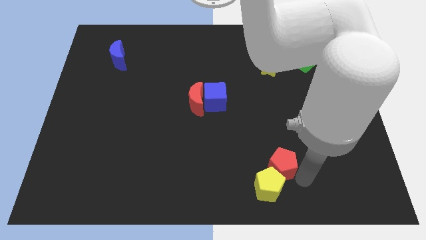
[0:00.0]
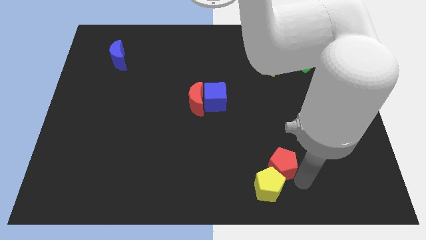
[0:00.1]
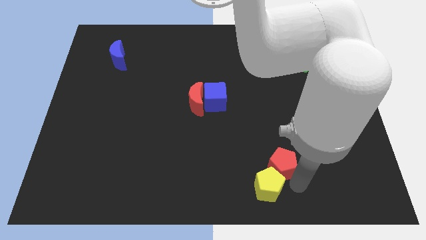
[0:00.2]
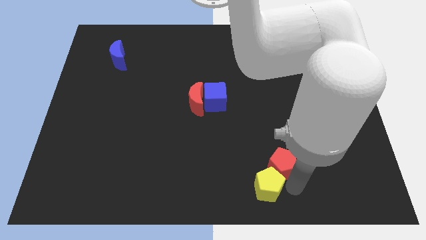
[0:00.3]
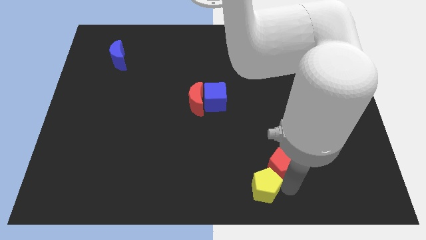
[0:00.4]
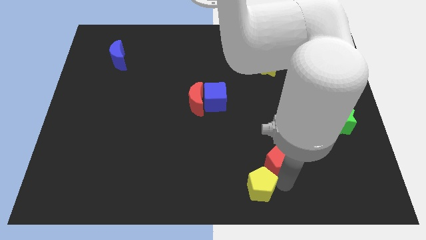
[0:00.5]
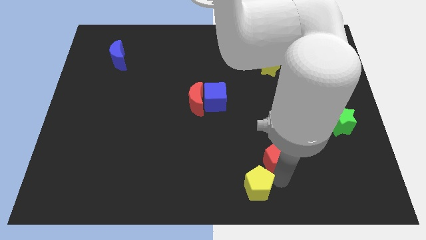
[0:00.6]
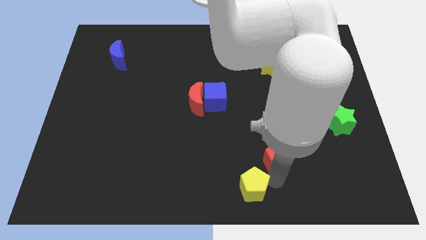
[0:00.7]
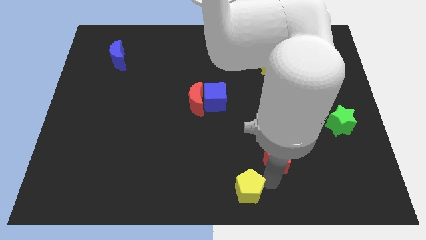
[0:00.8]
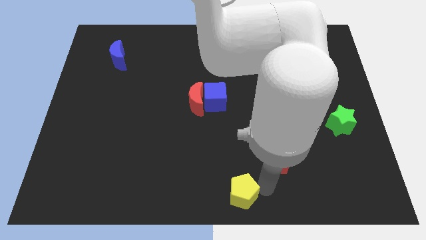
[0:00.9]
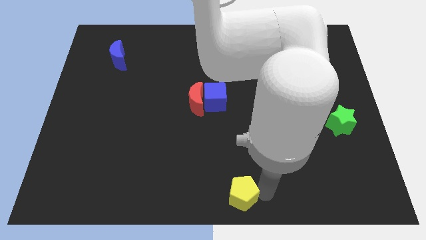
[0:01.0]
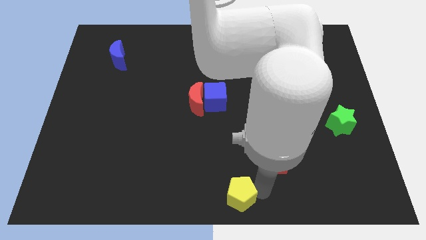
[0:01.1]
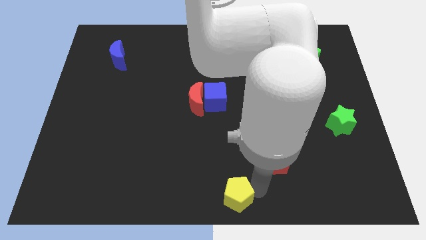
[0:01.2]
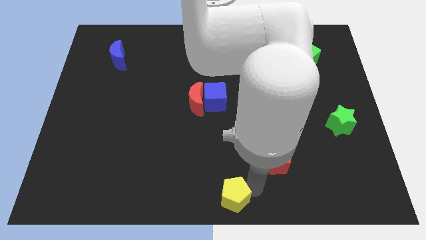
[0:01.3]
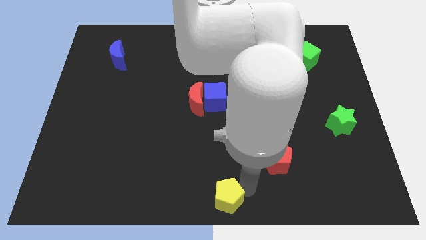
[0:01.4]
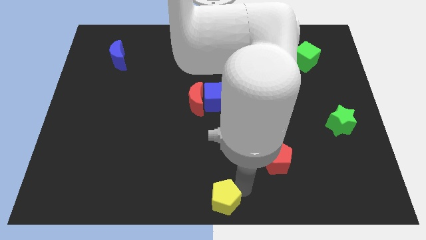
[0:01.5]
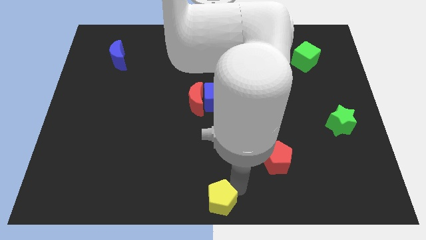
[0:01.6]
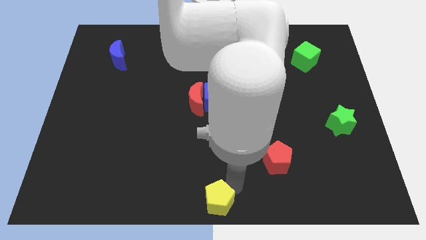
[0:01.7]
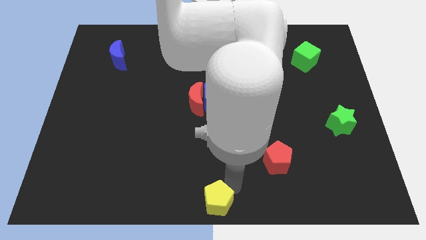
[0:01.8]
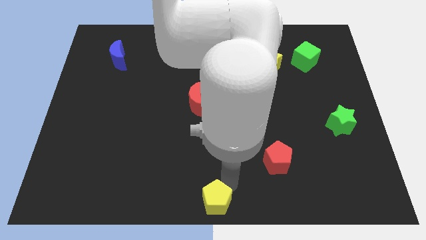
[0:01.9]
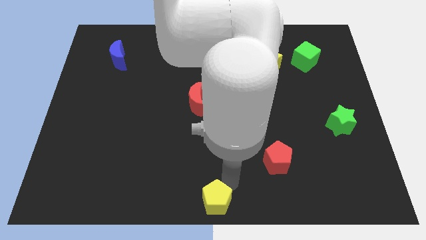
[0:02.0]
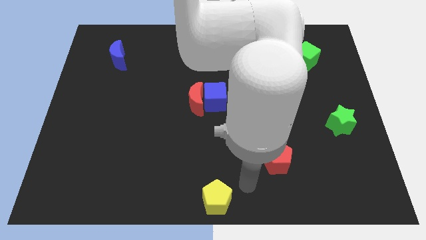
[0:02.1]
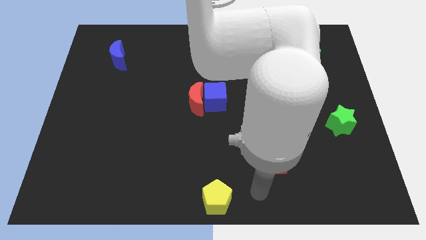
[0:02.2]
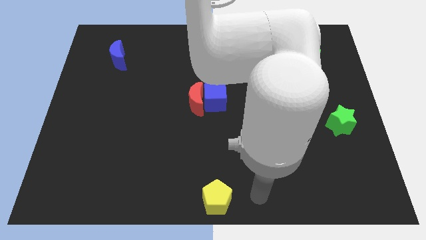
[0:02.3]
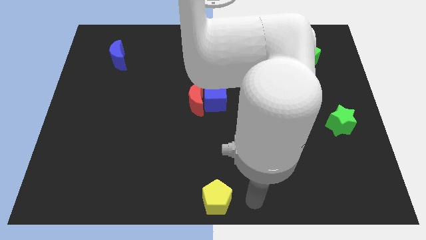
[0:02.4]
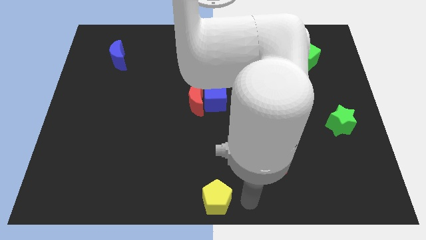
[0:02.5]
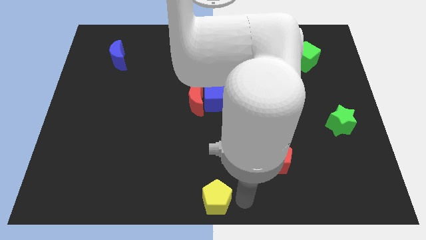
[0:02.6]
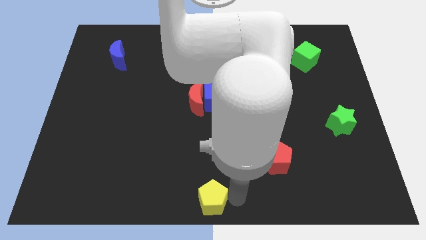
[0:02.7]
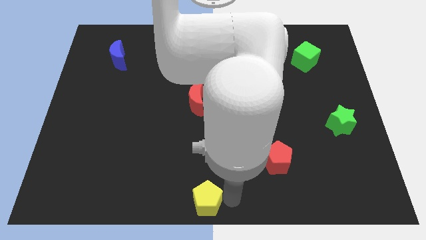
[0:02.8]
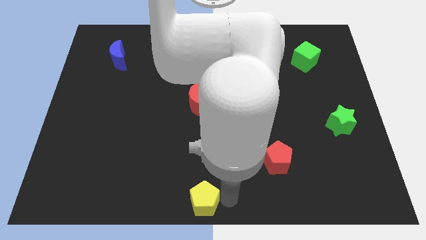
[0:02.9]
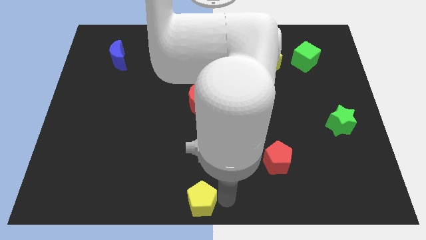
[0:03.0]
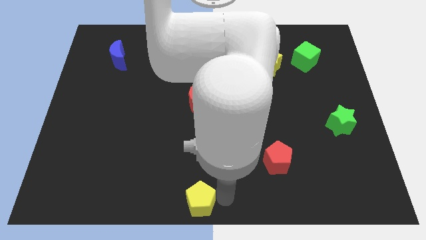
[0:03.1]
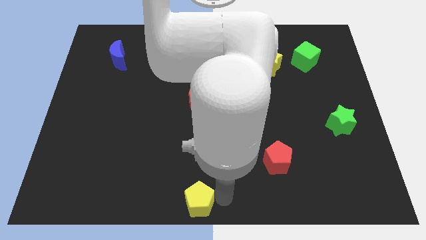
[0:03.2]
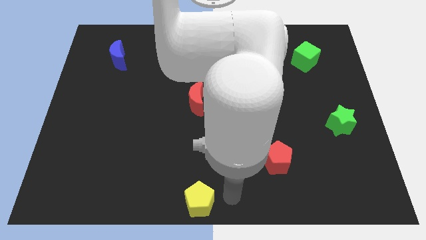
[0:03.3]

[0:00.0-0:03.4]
push the yellow pentagon to the bottom center of the board

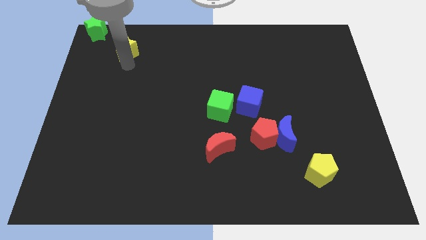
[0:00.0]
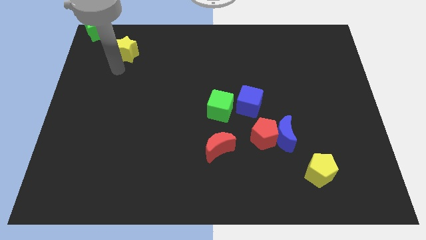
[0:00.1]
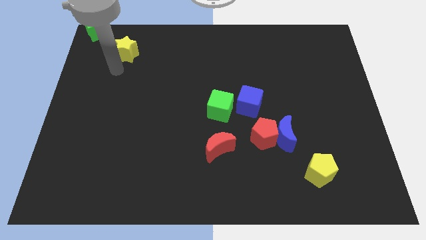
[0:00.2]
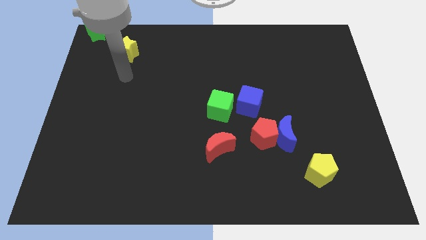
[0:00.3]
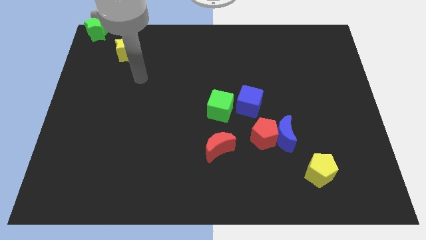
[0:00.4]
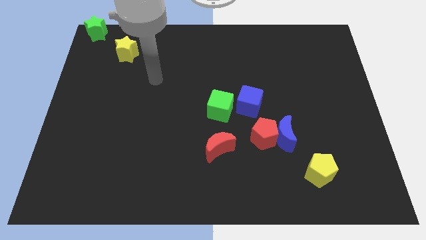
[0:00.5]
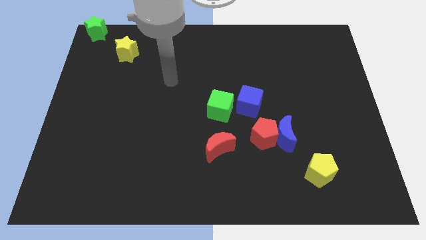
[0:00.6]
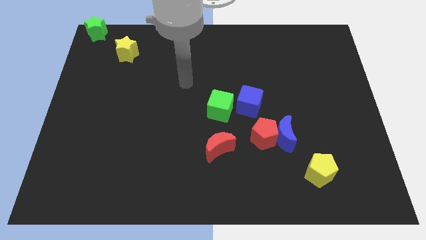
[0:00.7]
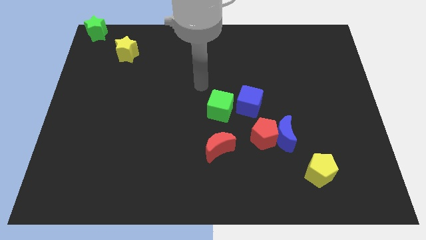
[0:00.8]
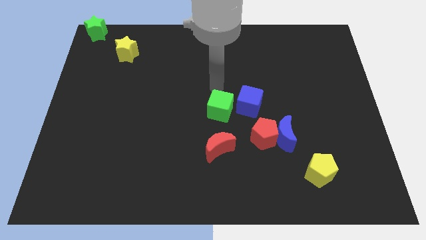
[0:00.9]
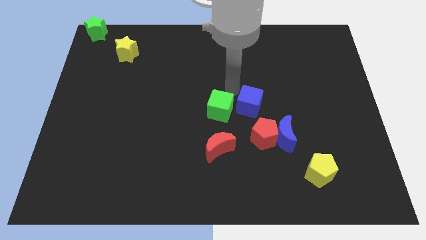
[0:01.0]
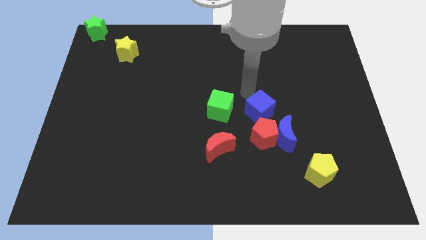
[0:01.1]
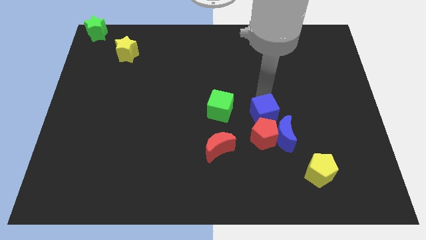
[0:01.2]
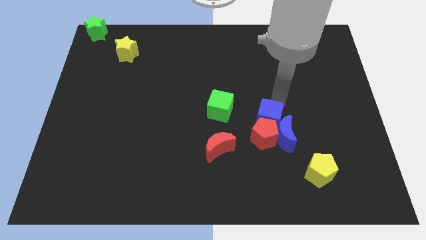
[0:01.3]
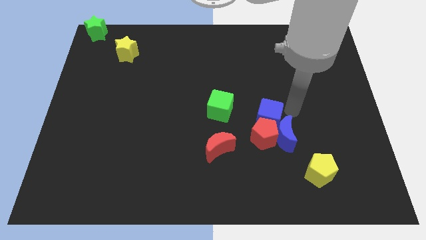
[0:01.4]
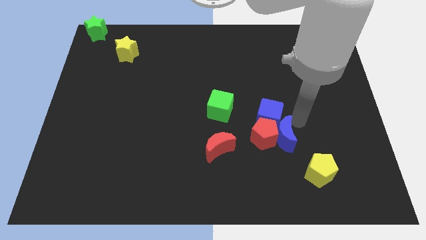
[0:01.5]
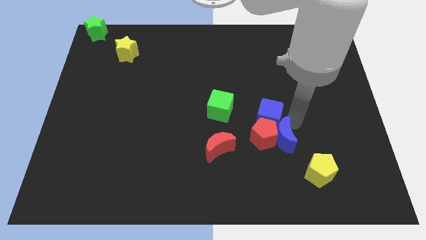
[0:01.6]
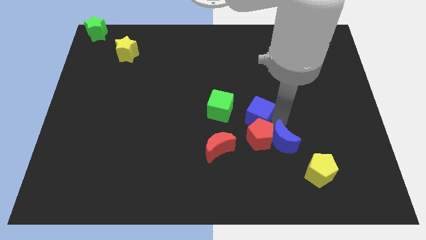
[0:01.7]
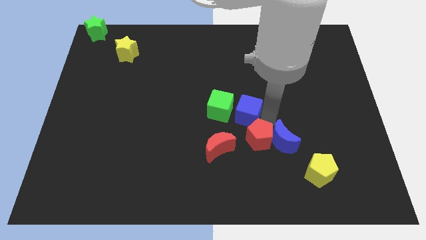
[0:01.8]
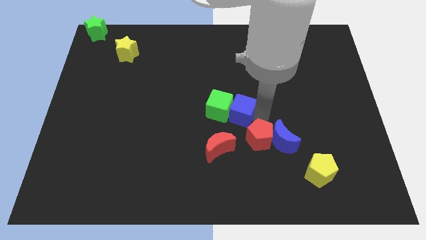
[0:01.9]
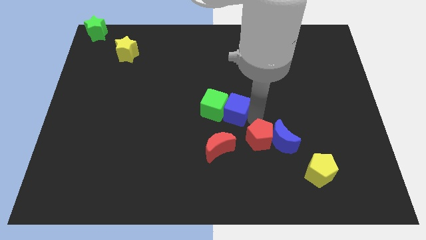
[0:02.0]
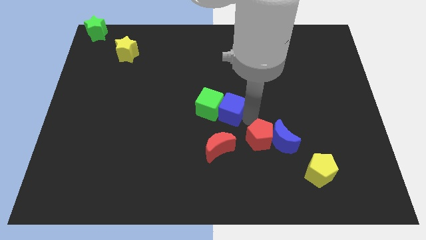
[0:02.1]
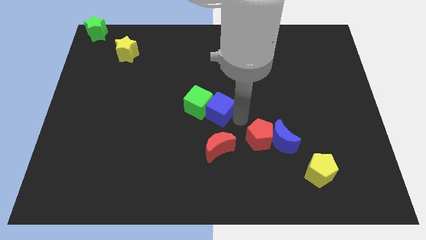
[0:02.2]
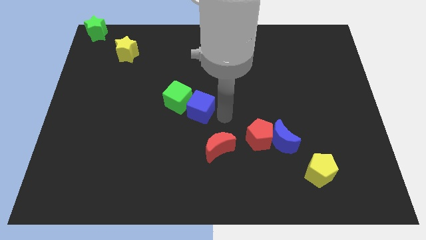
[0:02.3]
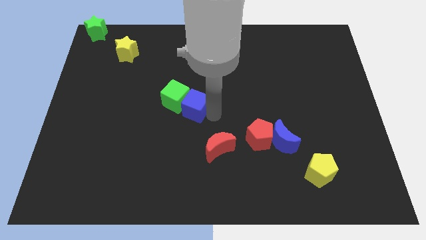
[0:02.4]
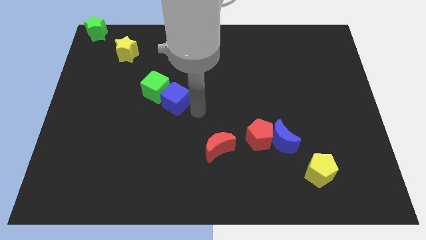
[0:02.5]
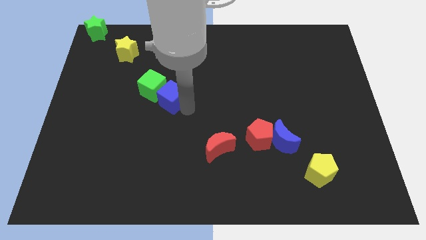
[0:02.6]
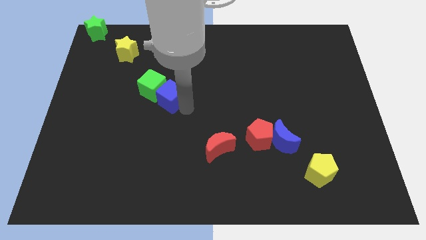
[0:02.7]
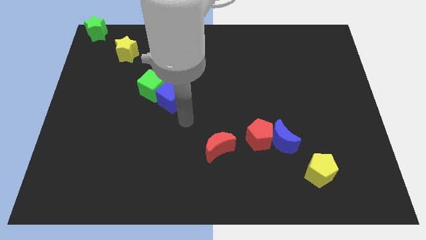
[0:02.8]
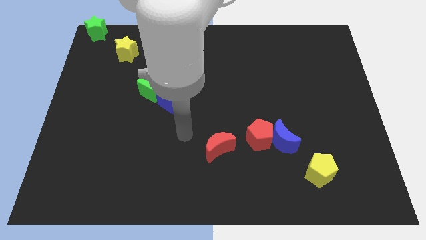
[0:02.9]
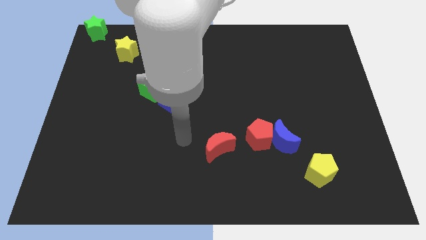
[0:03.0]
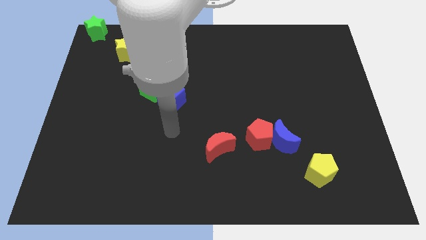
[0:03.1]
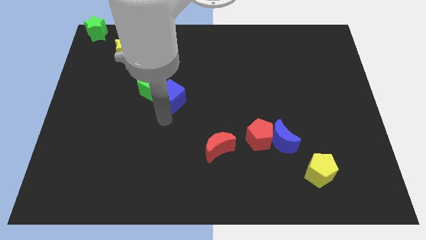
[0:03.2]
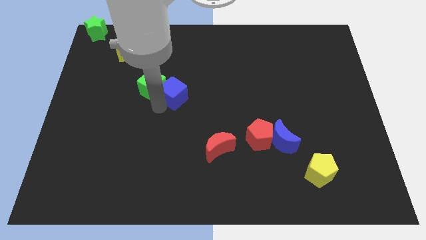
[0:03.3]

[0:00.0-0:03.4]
slide the blue cube and green cube diagonally above red moon

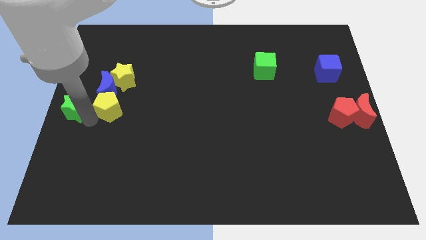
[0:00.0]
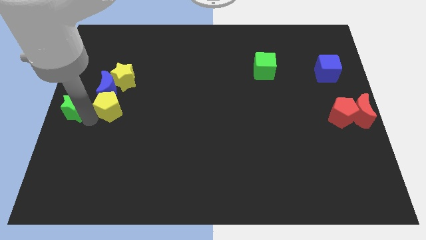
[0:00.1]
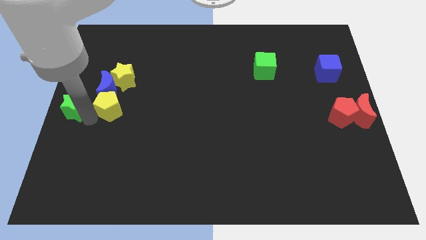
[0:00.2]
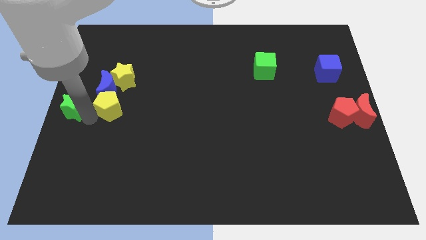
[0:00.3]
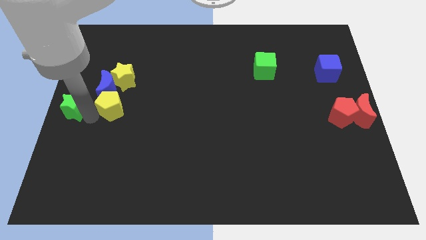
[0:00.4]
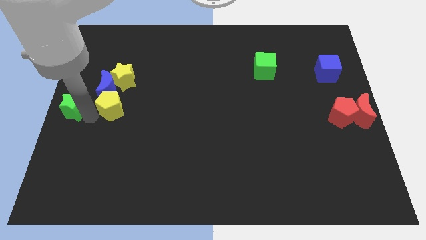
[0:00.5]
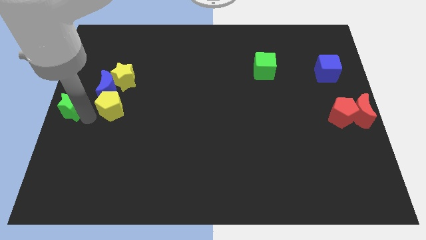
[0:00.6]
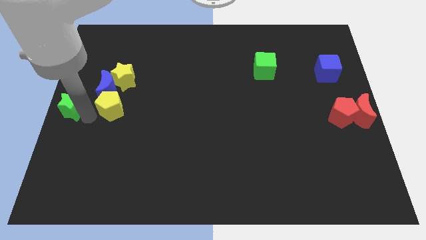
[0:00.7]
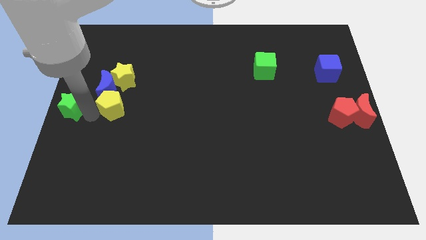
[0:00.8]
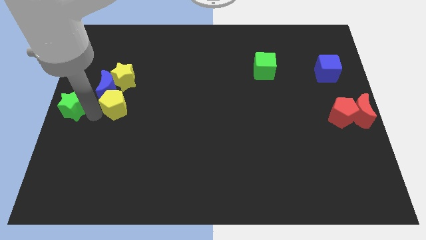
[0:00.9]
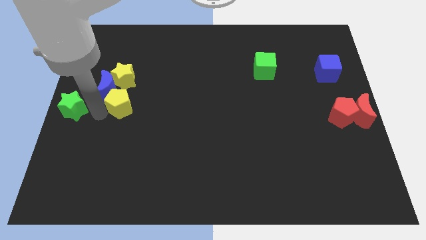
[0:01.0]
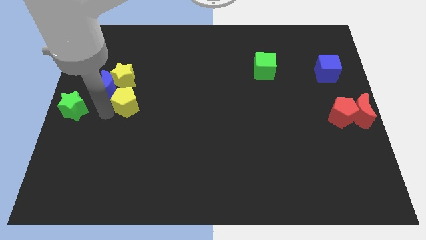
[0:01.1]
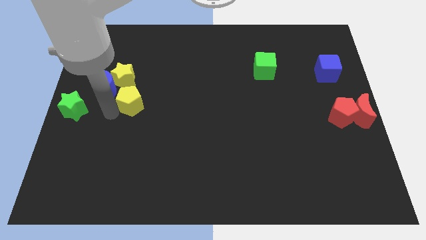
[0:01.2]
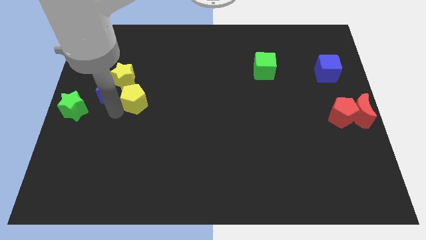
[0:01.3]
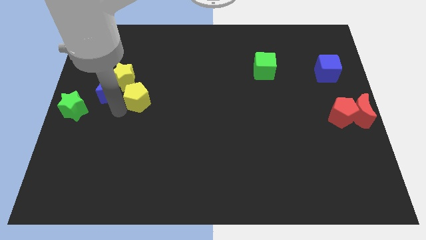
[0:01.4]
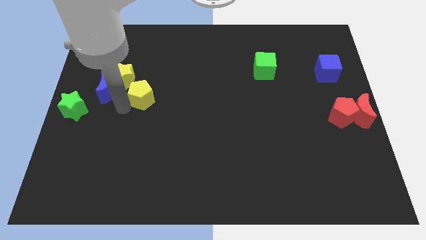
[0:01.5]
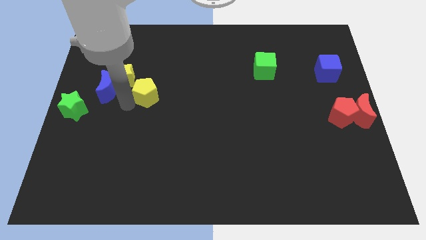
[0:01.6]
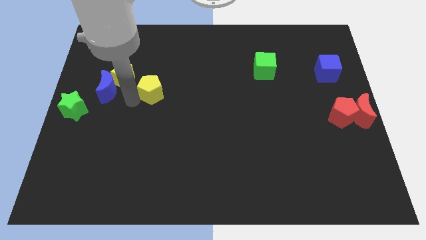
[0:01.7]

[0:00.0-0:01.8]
move the yellow pentagon slightly towards right

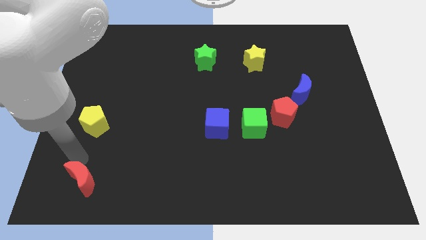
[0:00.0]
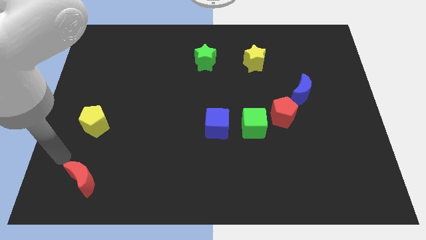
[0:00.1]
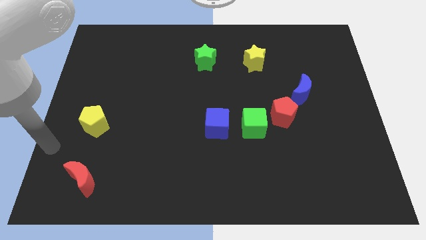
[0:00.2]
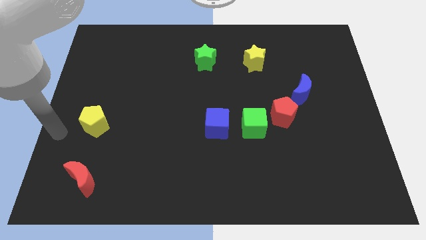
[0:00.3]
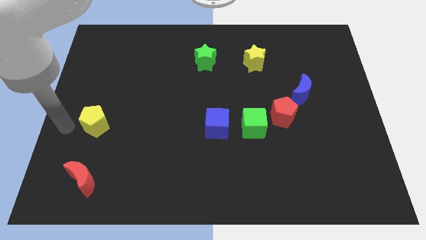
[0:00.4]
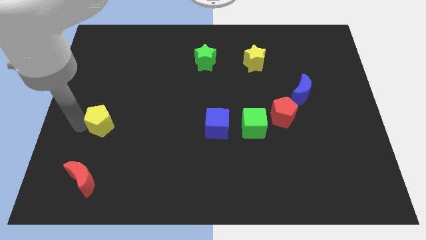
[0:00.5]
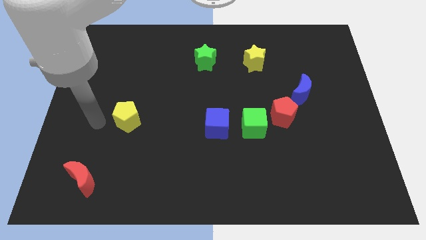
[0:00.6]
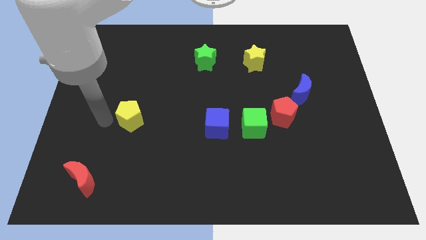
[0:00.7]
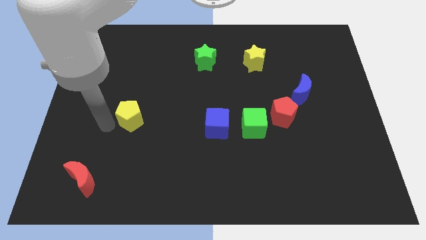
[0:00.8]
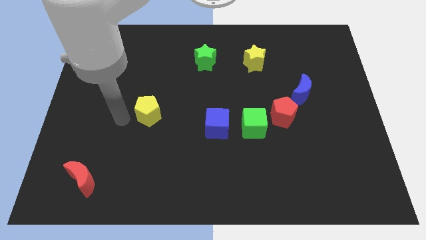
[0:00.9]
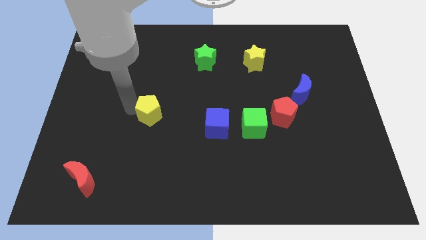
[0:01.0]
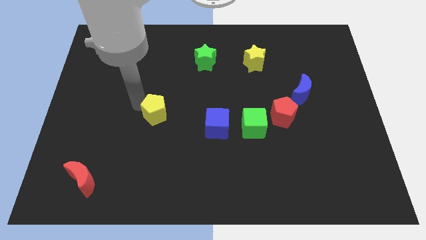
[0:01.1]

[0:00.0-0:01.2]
place the yellow pentagon to the left of the blue cube
